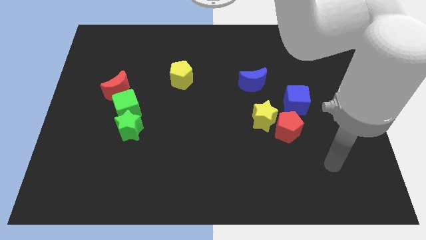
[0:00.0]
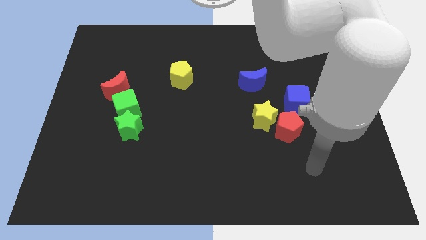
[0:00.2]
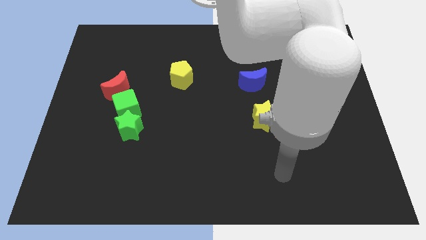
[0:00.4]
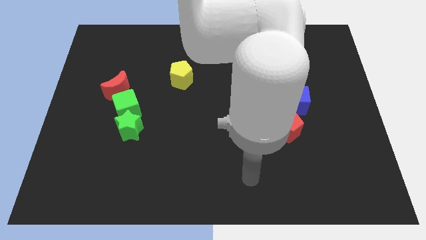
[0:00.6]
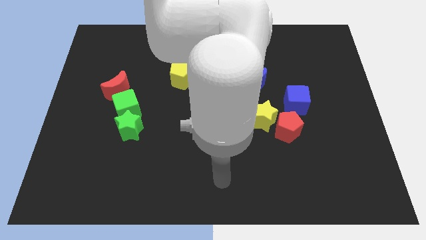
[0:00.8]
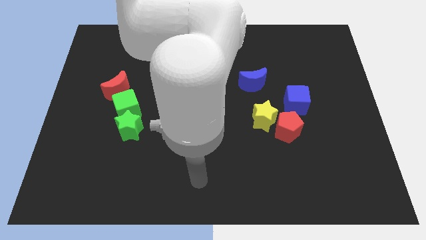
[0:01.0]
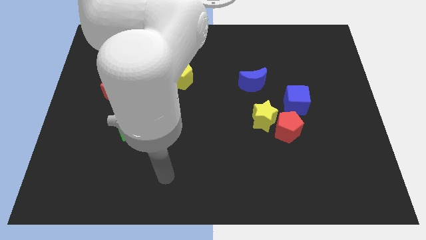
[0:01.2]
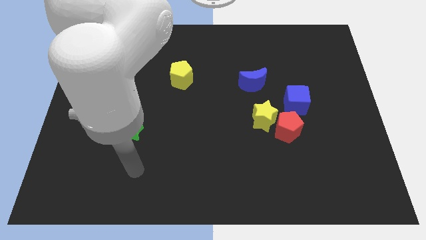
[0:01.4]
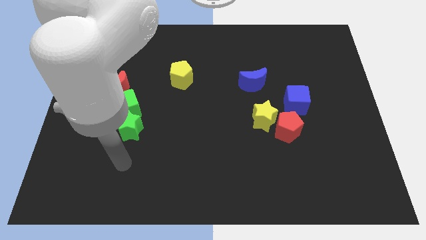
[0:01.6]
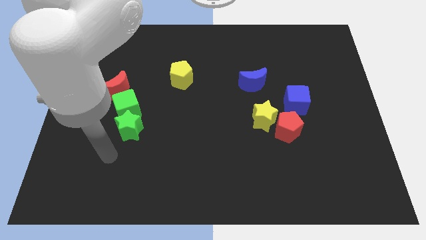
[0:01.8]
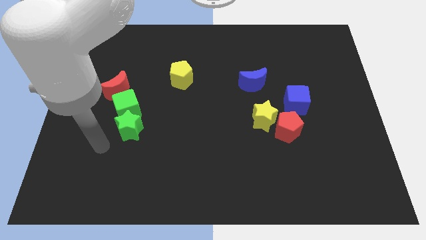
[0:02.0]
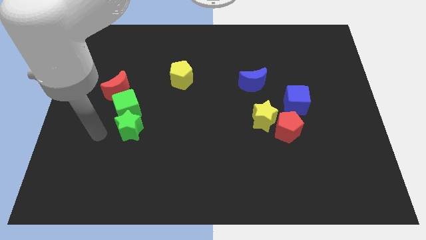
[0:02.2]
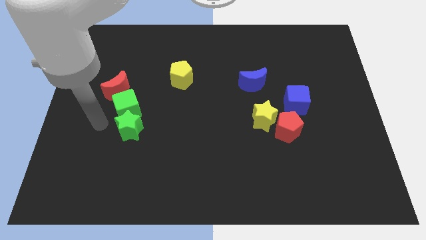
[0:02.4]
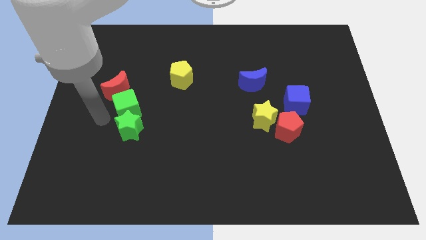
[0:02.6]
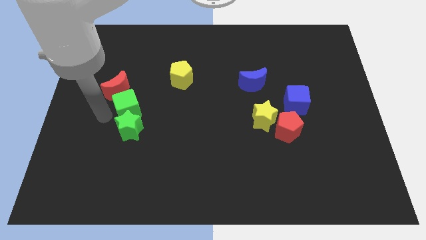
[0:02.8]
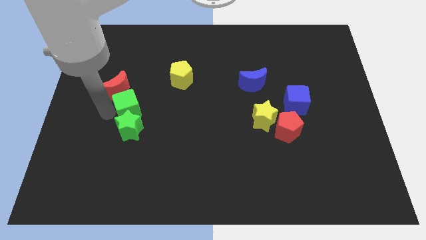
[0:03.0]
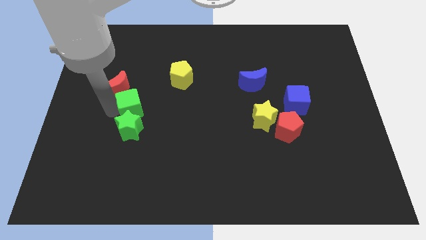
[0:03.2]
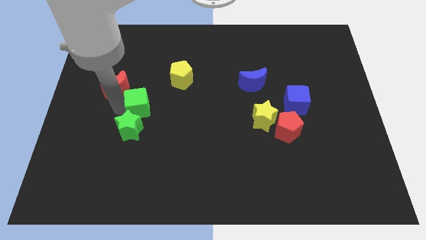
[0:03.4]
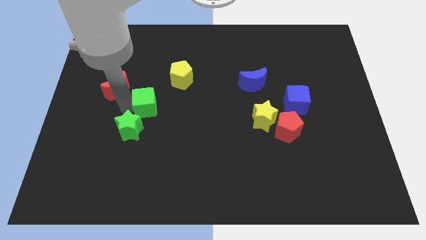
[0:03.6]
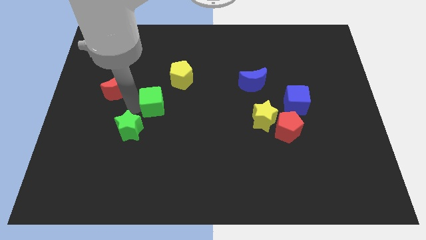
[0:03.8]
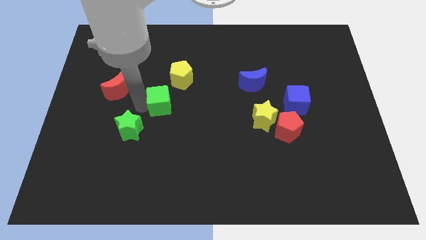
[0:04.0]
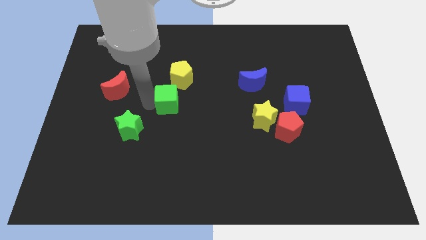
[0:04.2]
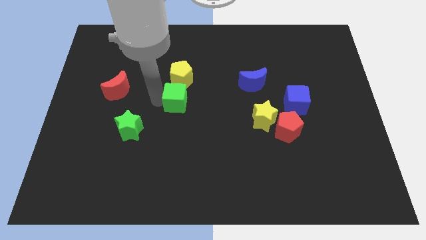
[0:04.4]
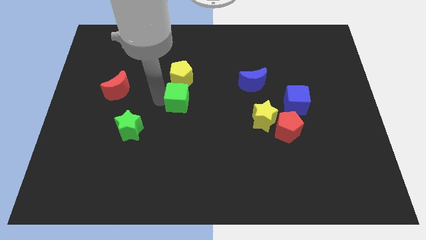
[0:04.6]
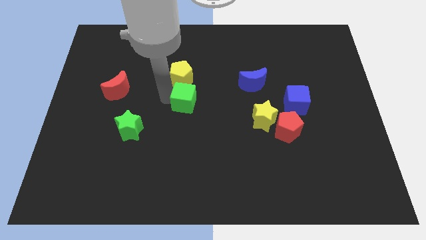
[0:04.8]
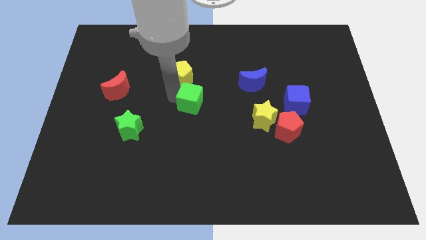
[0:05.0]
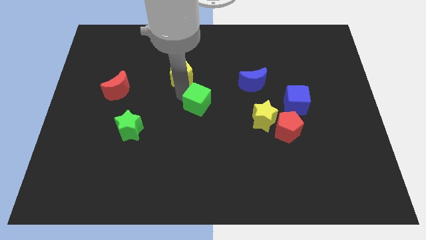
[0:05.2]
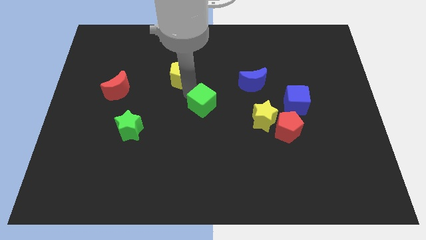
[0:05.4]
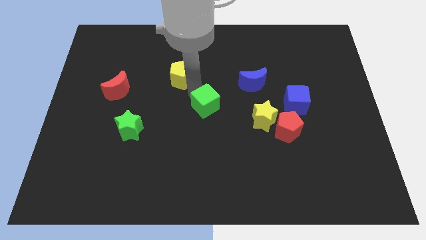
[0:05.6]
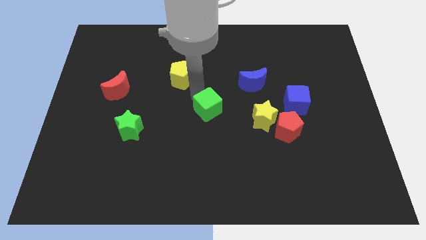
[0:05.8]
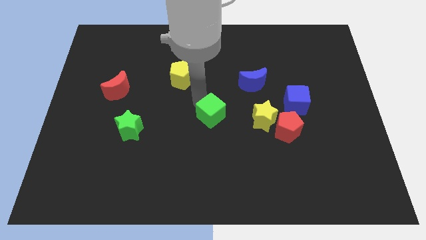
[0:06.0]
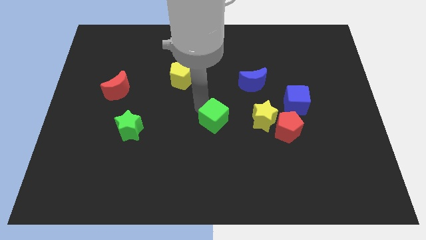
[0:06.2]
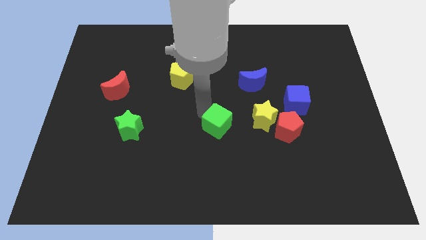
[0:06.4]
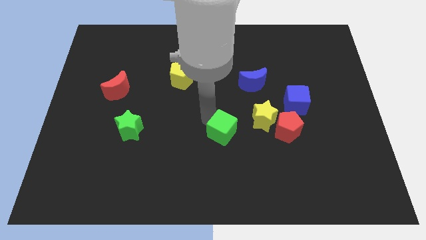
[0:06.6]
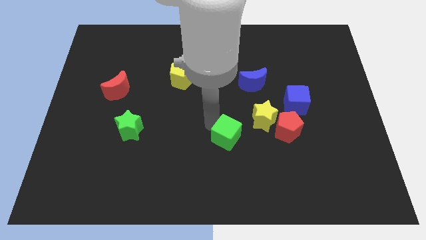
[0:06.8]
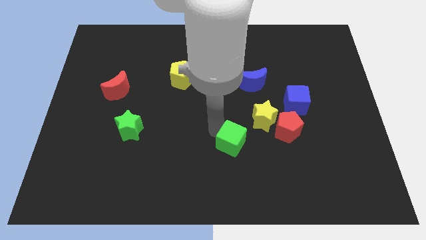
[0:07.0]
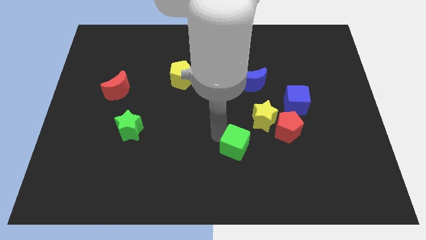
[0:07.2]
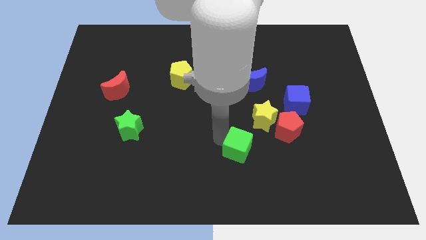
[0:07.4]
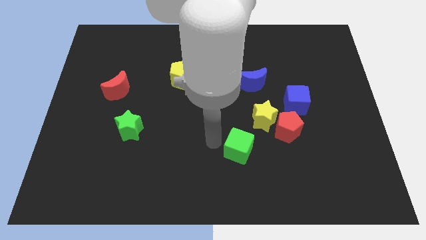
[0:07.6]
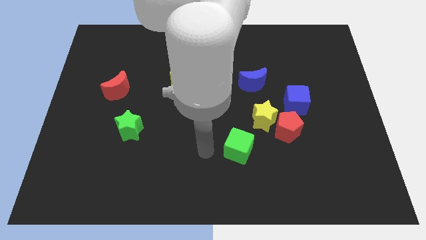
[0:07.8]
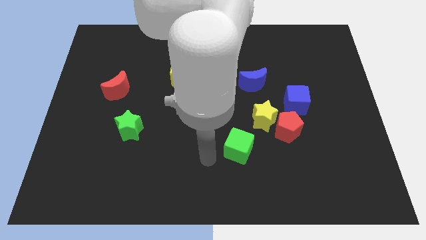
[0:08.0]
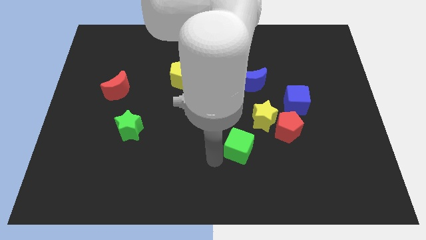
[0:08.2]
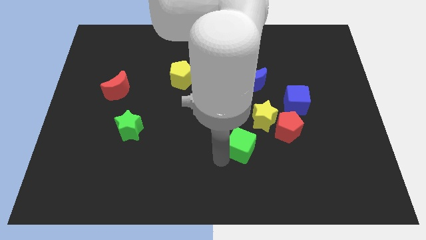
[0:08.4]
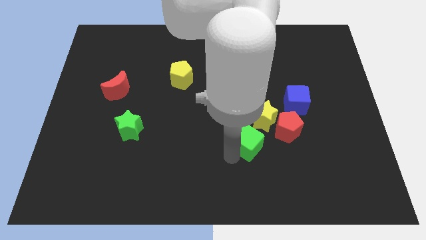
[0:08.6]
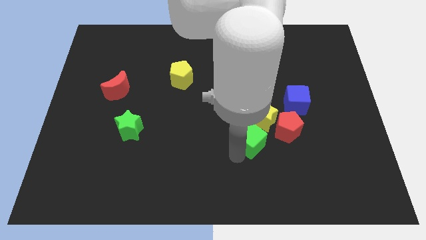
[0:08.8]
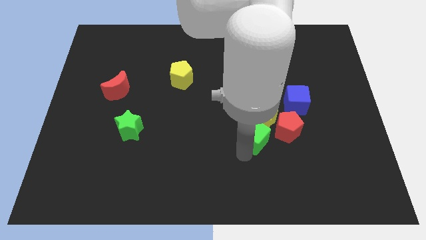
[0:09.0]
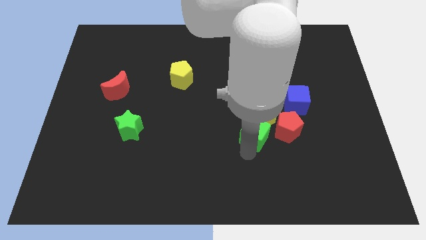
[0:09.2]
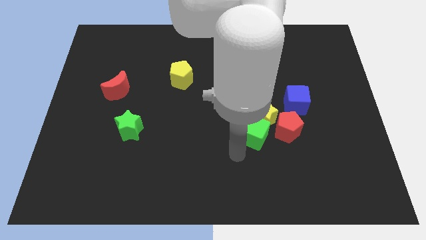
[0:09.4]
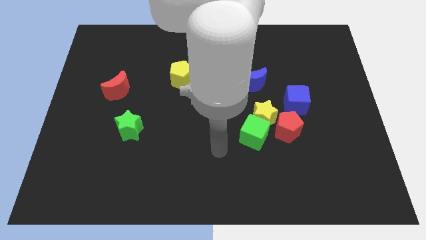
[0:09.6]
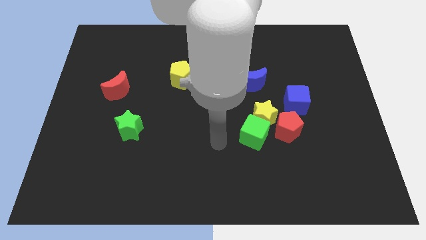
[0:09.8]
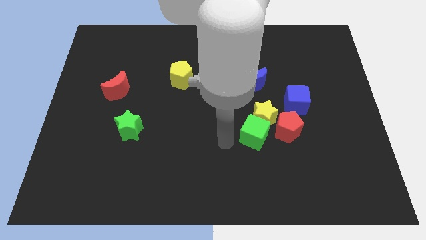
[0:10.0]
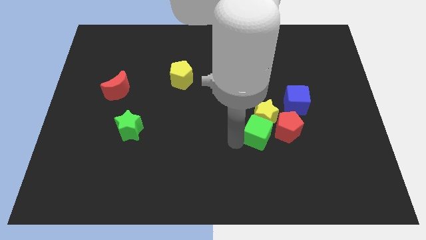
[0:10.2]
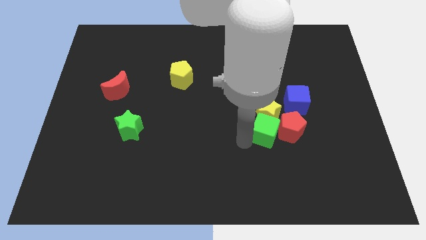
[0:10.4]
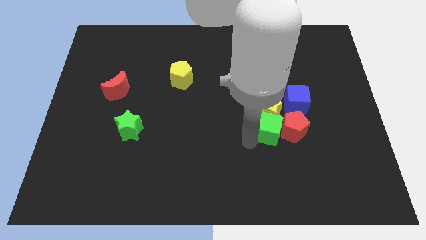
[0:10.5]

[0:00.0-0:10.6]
move the green cube next to the red pentagon

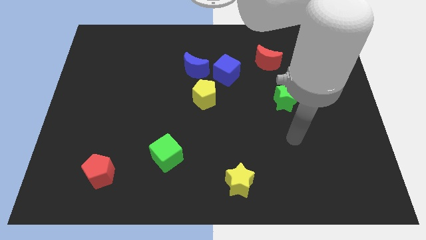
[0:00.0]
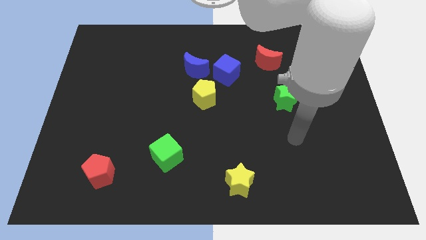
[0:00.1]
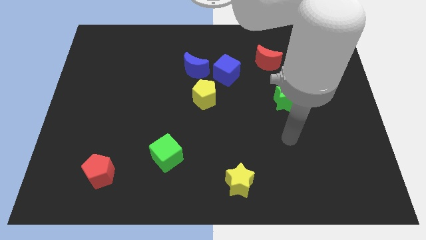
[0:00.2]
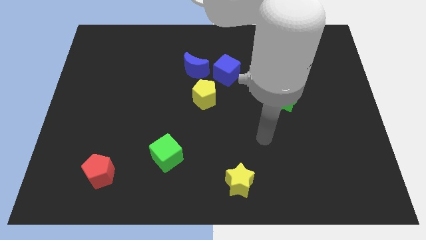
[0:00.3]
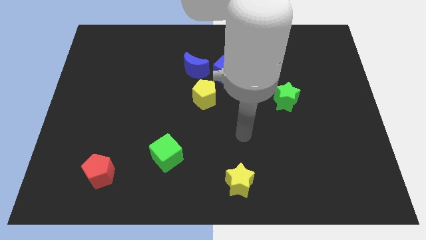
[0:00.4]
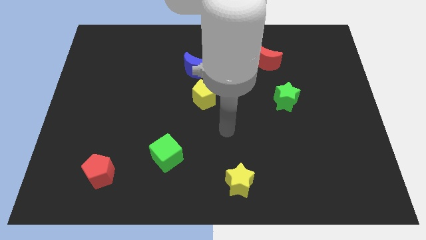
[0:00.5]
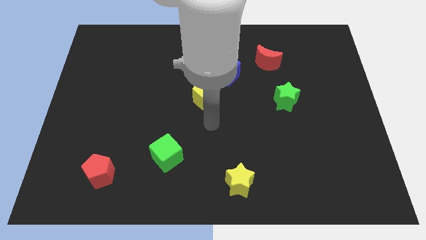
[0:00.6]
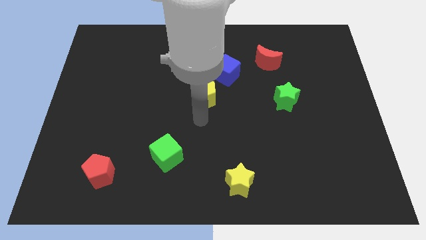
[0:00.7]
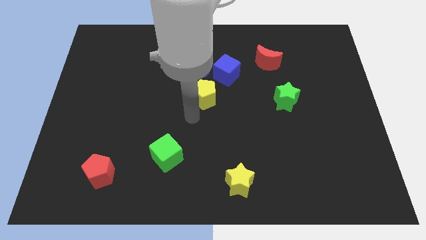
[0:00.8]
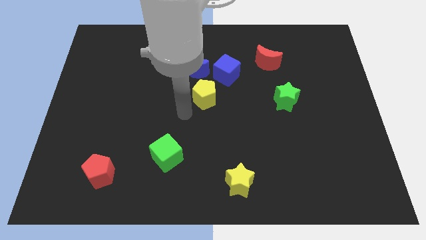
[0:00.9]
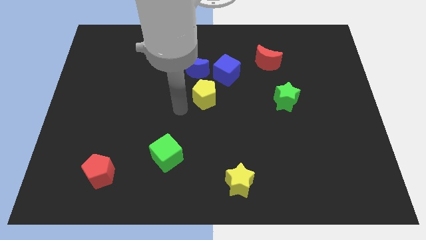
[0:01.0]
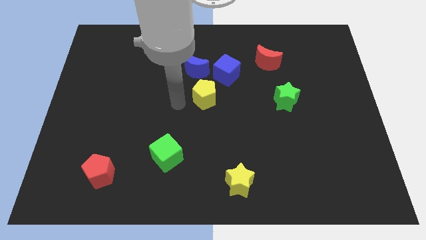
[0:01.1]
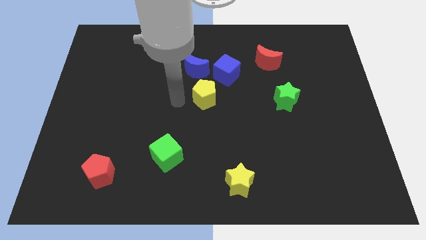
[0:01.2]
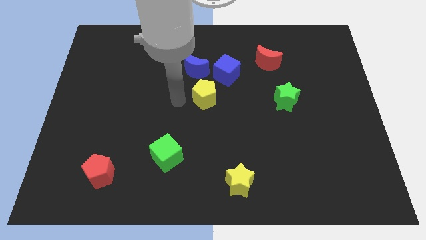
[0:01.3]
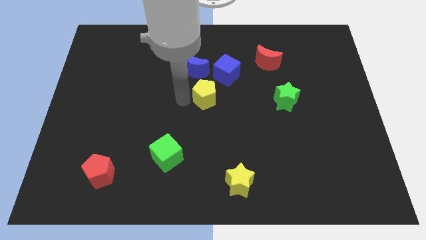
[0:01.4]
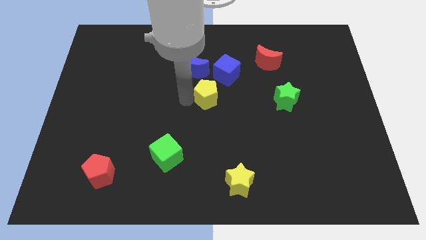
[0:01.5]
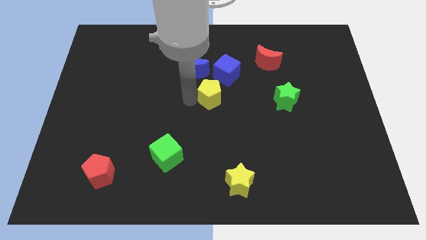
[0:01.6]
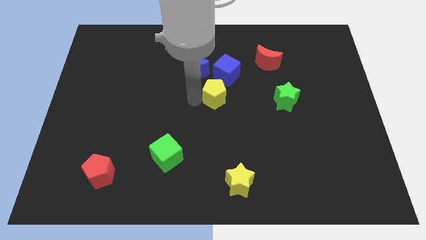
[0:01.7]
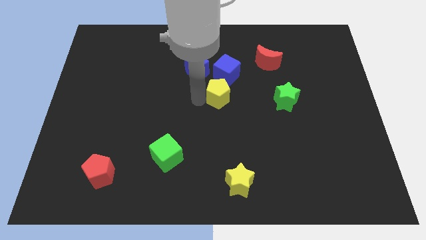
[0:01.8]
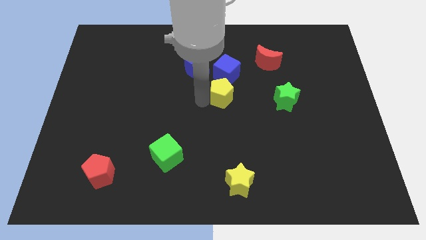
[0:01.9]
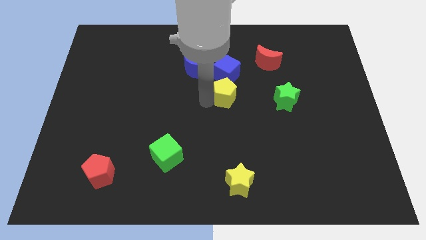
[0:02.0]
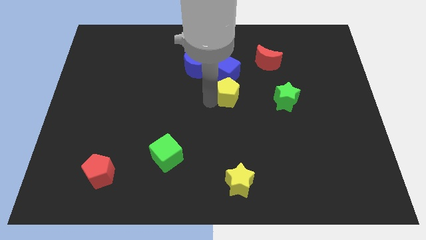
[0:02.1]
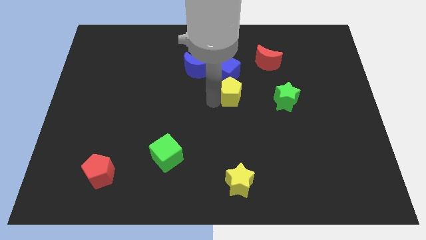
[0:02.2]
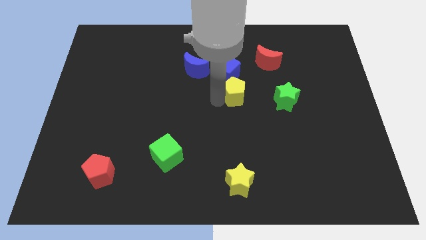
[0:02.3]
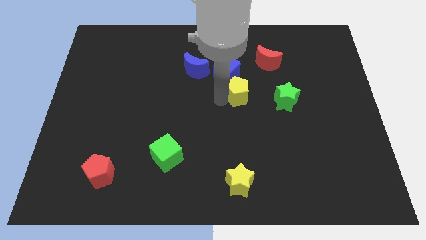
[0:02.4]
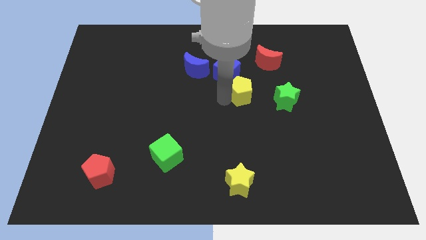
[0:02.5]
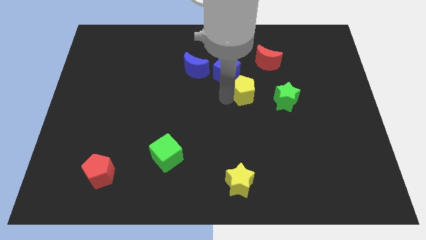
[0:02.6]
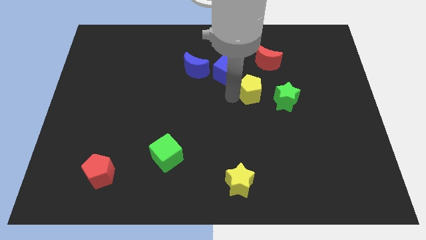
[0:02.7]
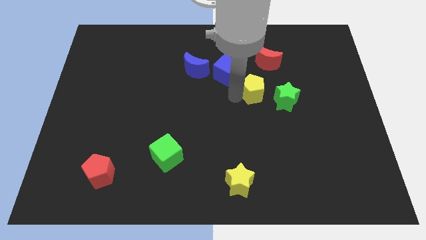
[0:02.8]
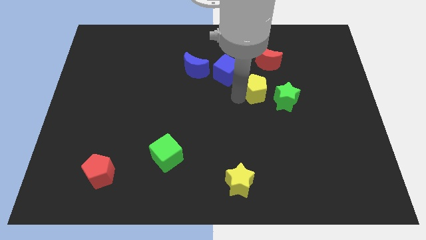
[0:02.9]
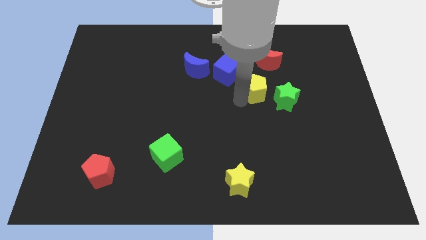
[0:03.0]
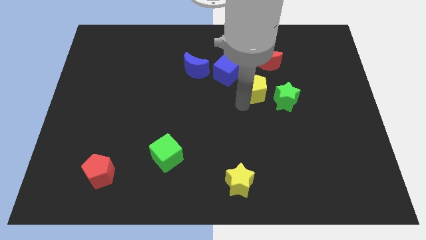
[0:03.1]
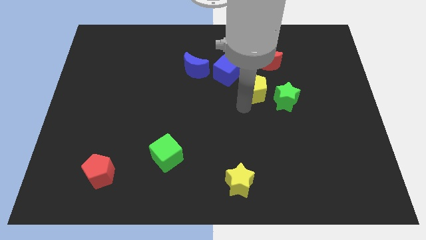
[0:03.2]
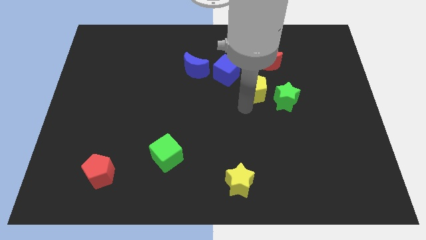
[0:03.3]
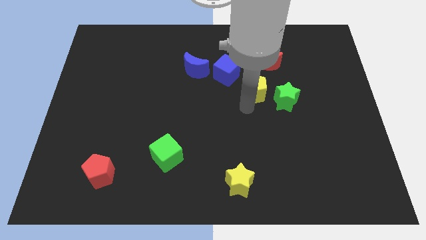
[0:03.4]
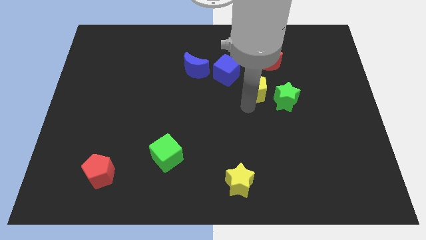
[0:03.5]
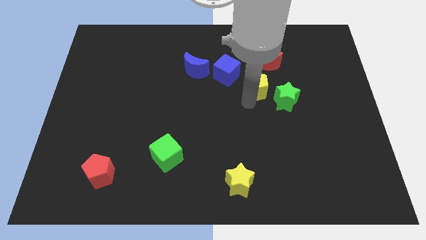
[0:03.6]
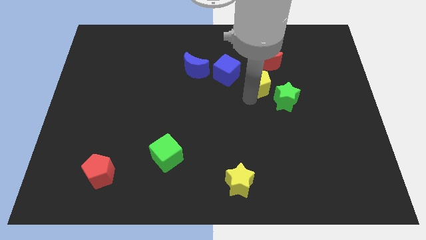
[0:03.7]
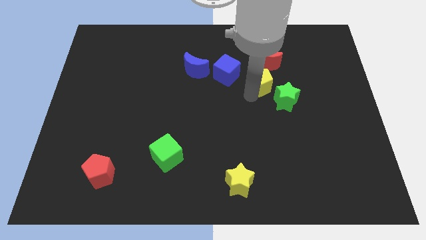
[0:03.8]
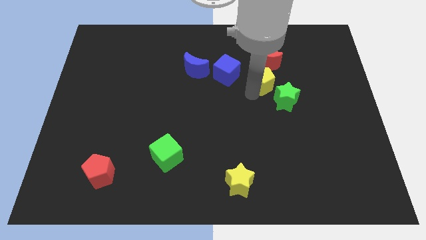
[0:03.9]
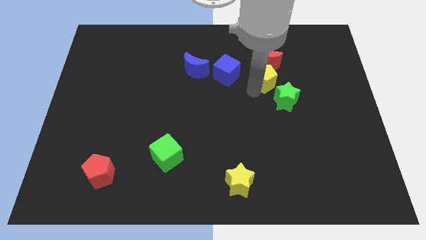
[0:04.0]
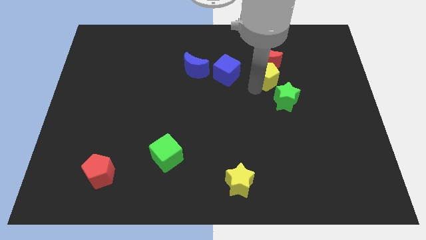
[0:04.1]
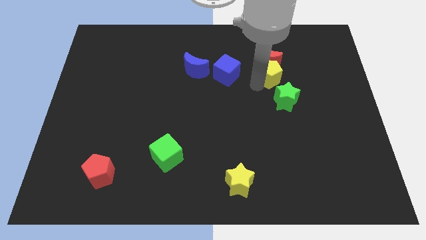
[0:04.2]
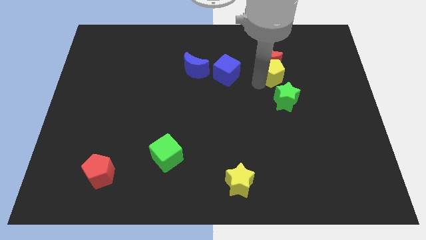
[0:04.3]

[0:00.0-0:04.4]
slide the yellow pentagon close to the red moon
